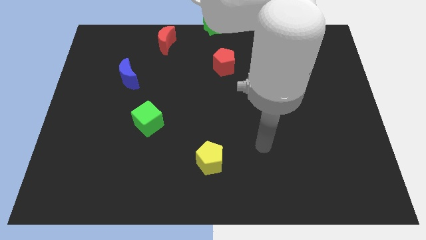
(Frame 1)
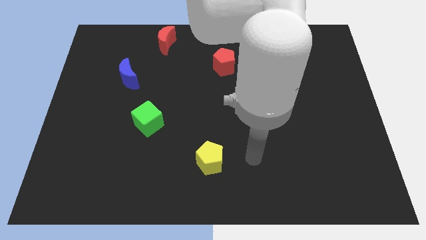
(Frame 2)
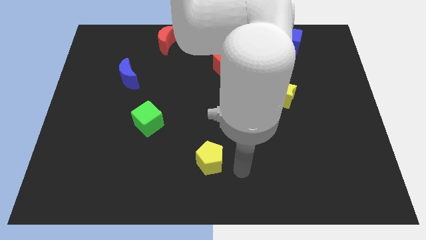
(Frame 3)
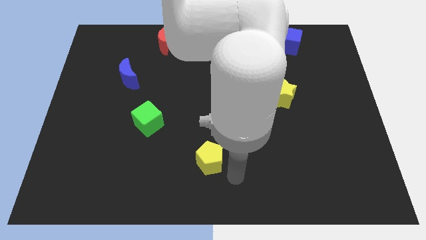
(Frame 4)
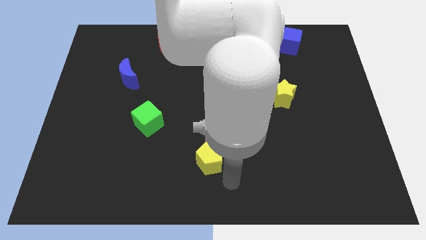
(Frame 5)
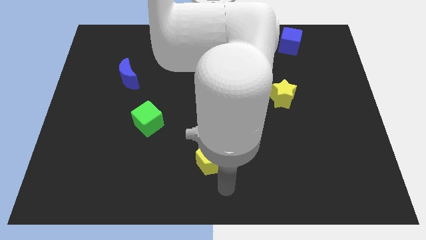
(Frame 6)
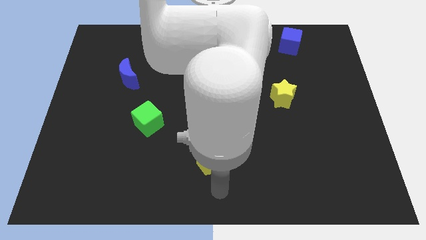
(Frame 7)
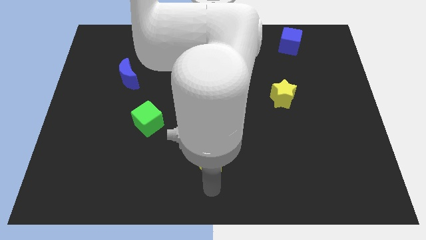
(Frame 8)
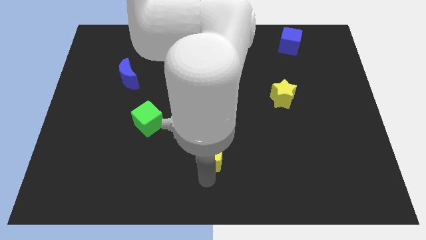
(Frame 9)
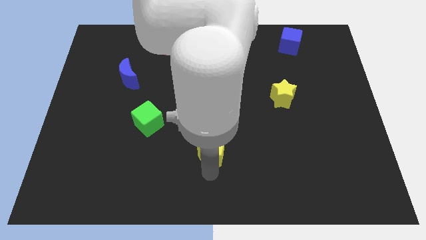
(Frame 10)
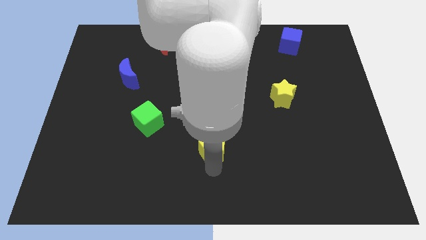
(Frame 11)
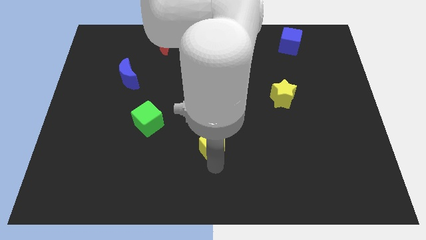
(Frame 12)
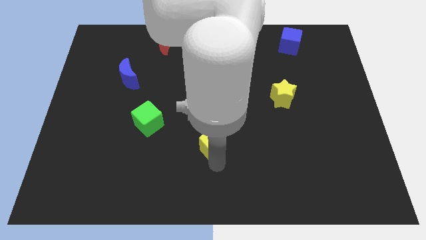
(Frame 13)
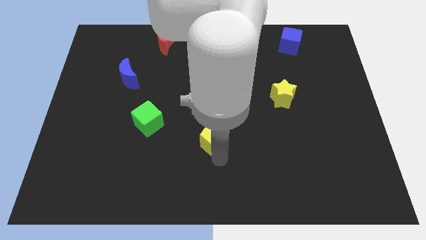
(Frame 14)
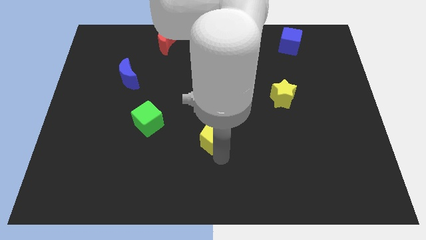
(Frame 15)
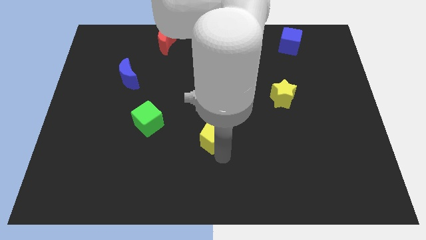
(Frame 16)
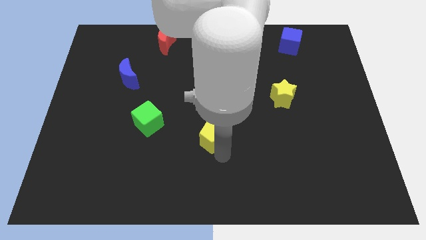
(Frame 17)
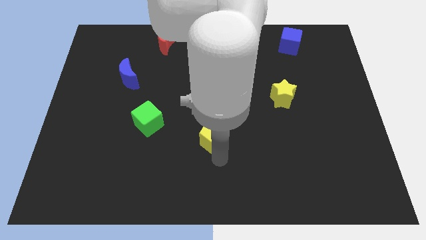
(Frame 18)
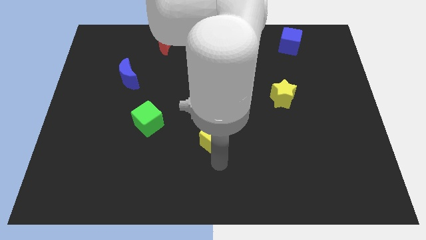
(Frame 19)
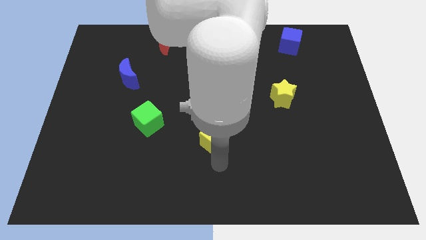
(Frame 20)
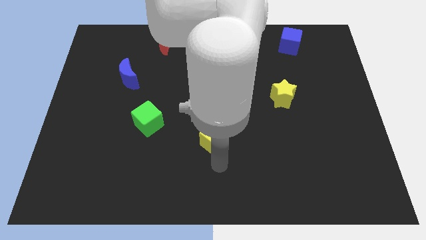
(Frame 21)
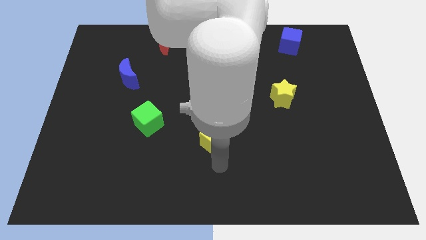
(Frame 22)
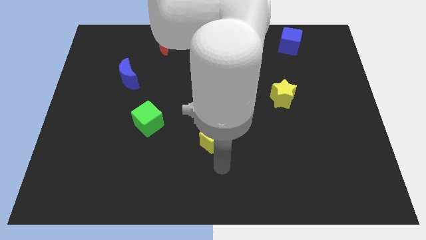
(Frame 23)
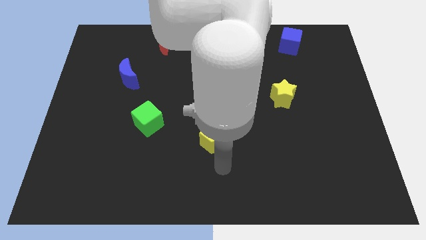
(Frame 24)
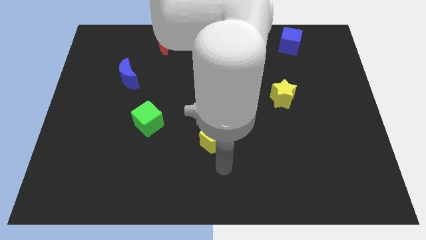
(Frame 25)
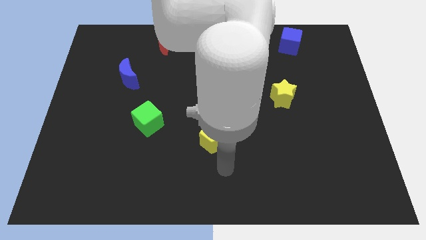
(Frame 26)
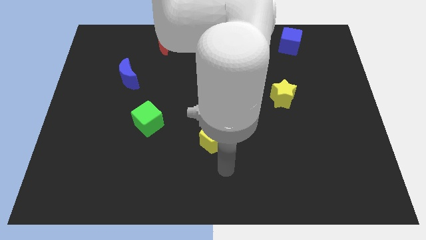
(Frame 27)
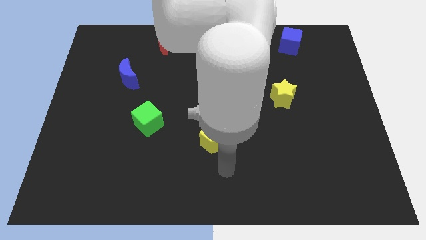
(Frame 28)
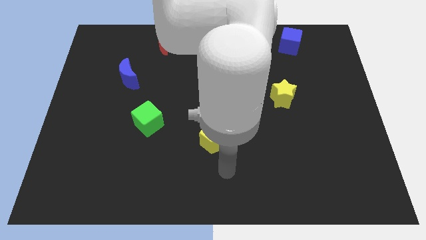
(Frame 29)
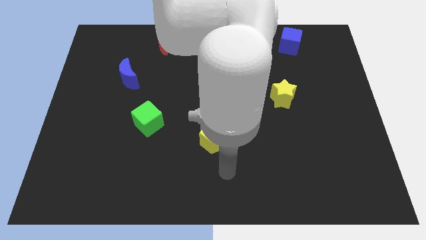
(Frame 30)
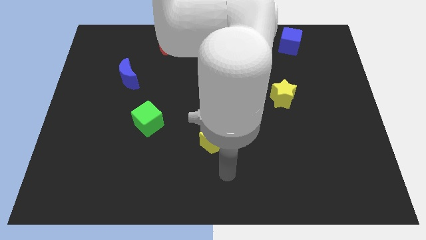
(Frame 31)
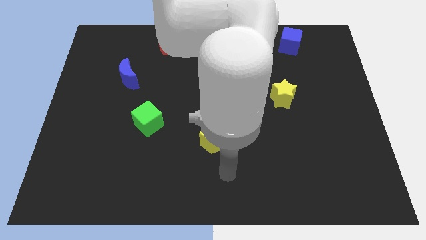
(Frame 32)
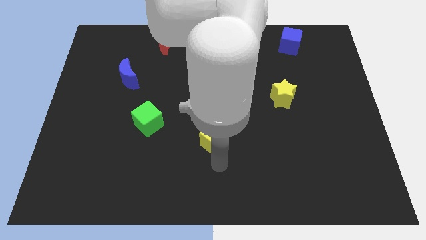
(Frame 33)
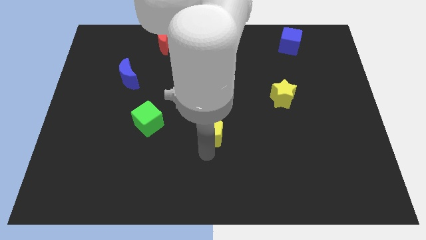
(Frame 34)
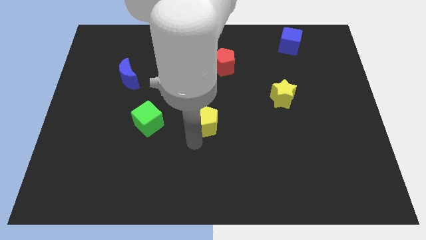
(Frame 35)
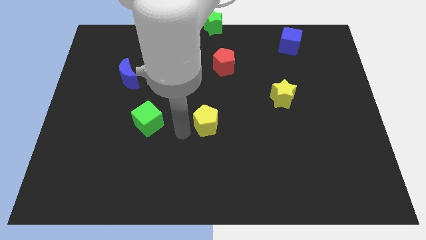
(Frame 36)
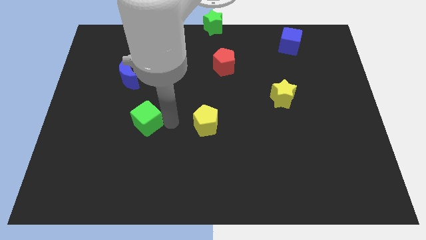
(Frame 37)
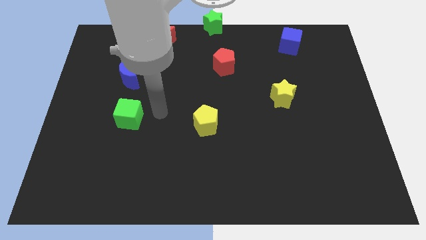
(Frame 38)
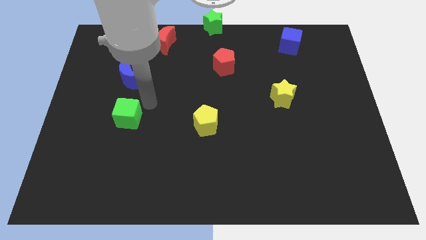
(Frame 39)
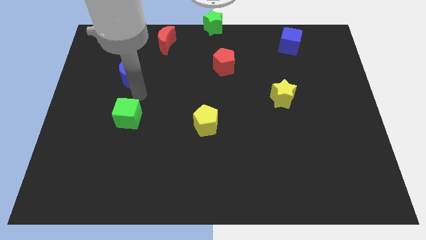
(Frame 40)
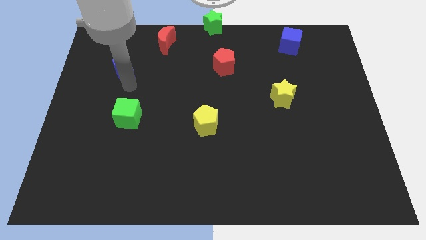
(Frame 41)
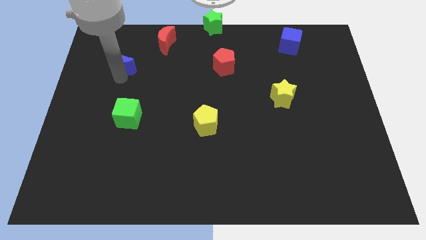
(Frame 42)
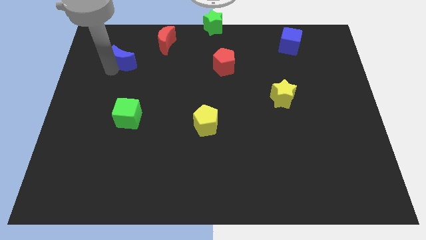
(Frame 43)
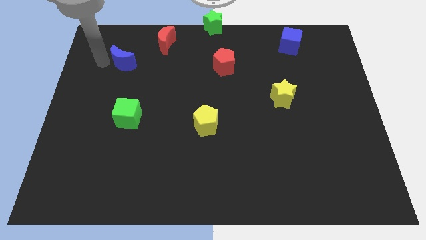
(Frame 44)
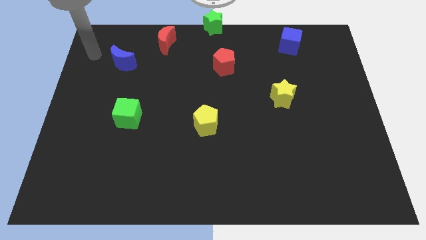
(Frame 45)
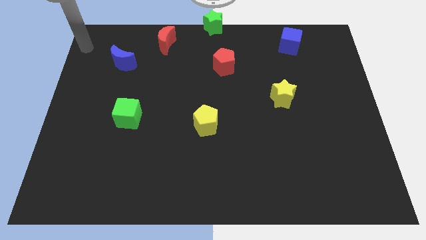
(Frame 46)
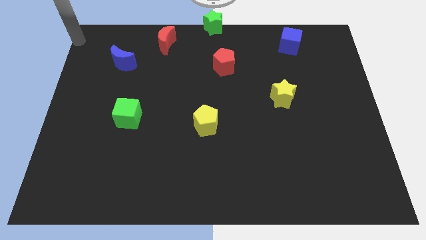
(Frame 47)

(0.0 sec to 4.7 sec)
move the yellow pentagon to the right of the green cube

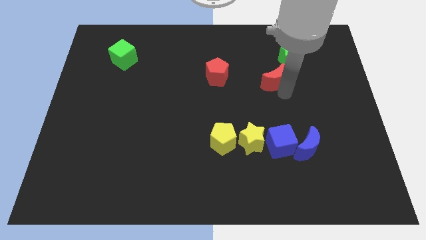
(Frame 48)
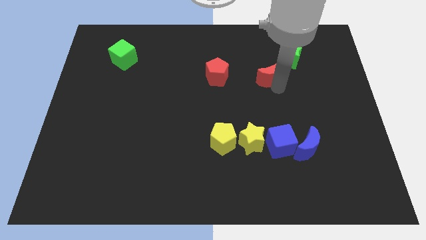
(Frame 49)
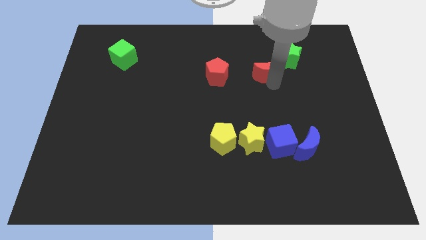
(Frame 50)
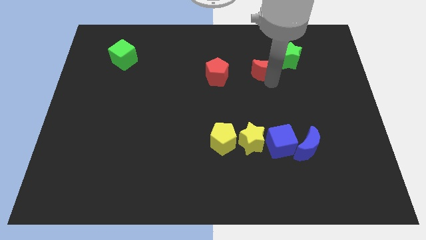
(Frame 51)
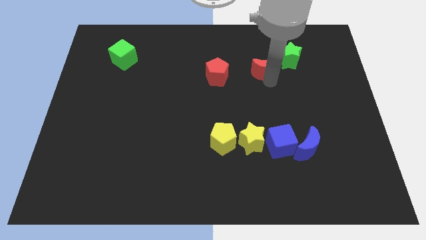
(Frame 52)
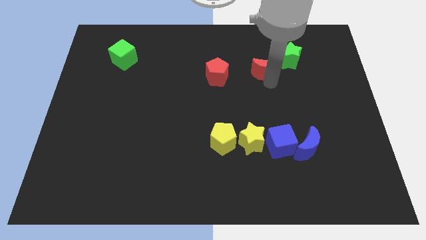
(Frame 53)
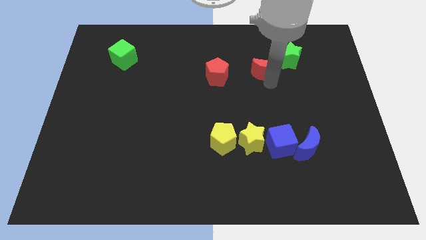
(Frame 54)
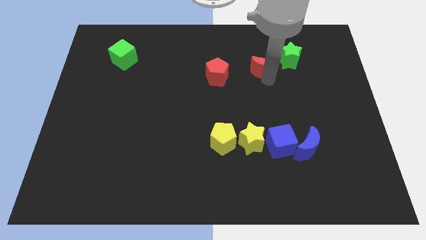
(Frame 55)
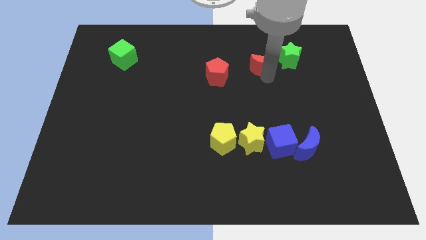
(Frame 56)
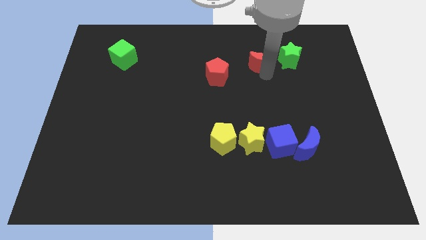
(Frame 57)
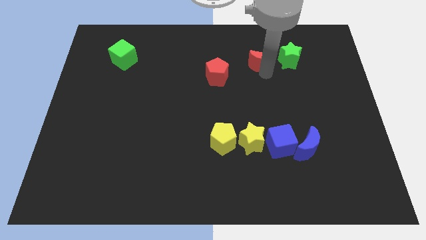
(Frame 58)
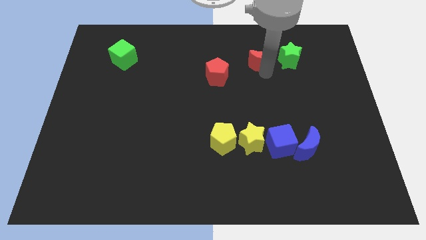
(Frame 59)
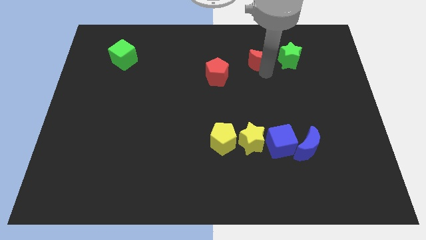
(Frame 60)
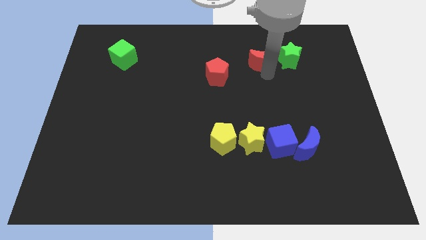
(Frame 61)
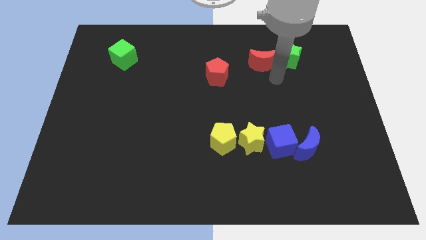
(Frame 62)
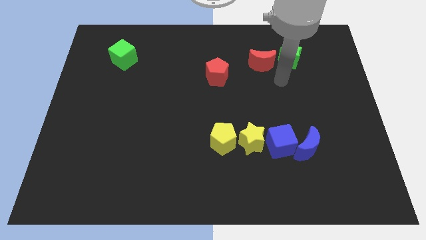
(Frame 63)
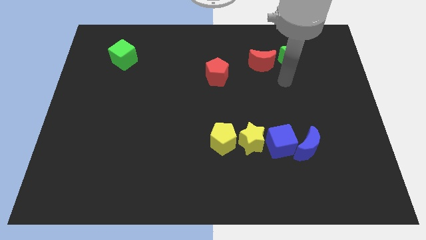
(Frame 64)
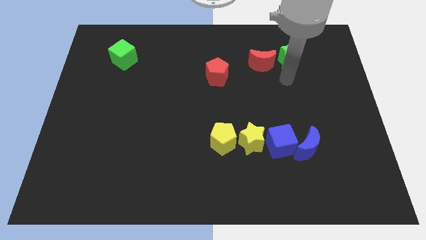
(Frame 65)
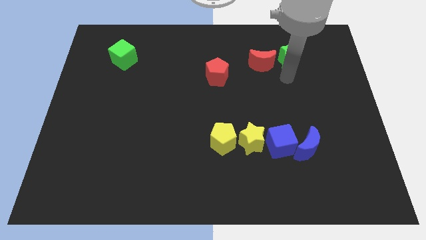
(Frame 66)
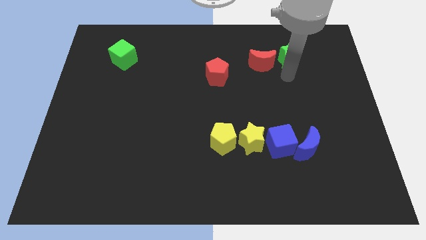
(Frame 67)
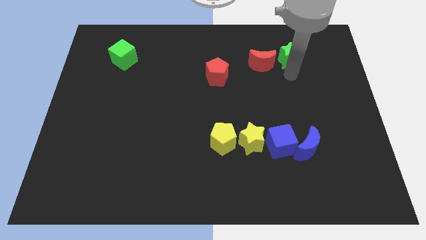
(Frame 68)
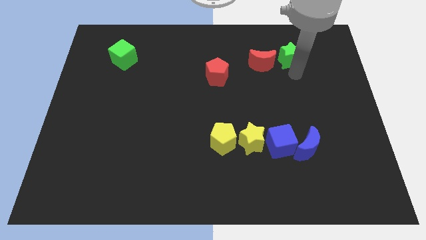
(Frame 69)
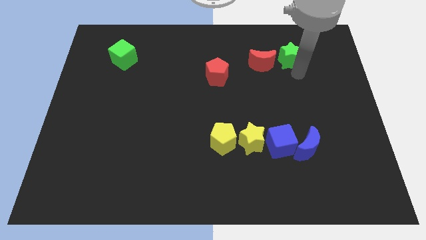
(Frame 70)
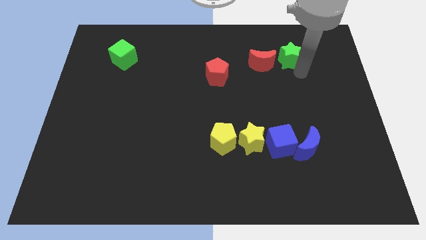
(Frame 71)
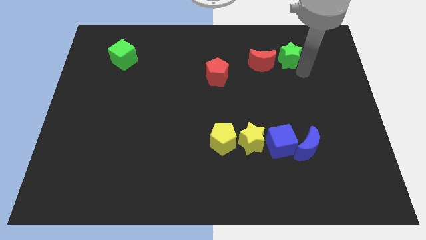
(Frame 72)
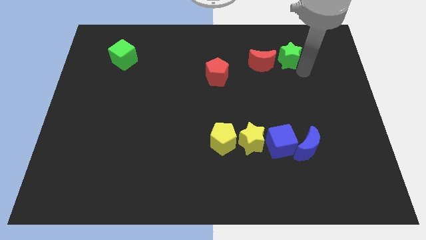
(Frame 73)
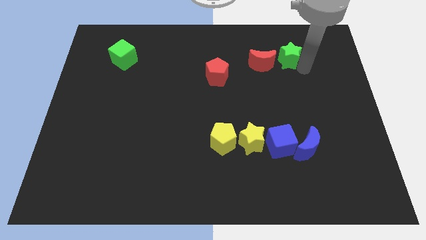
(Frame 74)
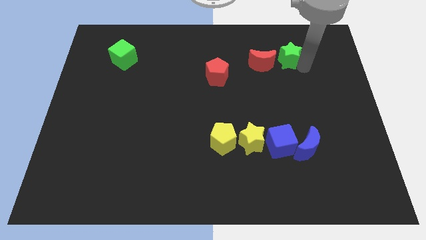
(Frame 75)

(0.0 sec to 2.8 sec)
put the red crescent at the left side of the green star

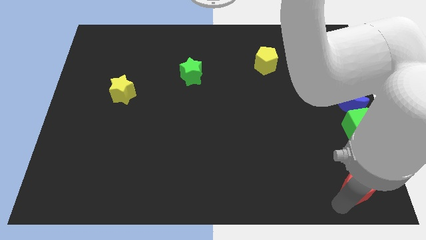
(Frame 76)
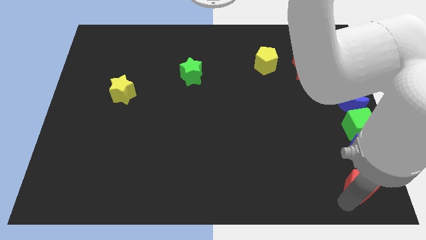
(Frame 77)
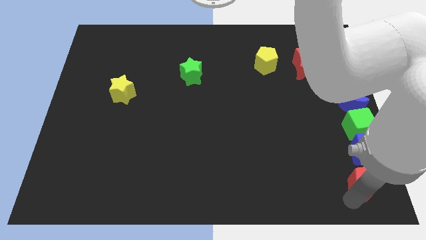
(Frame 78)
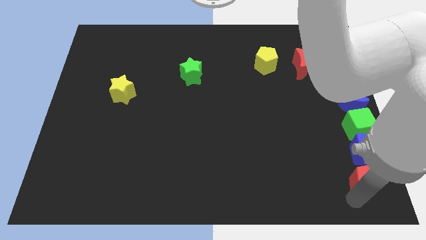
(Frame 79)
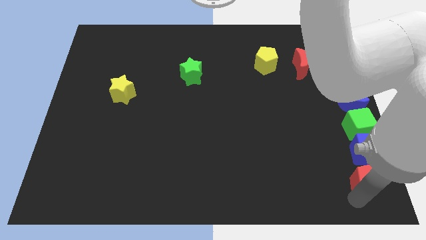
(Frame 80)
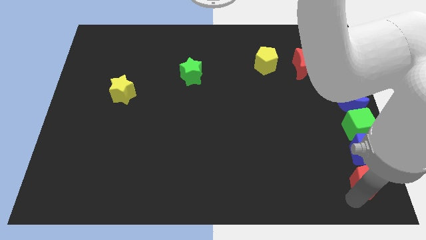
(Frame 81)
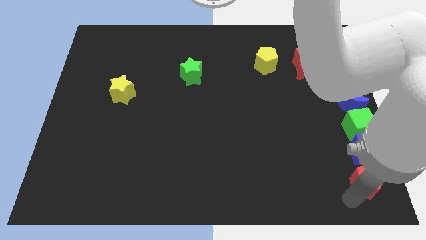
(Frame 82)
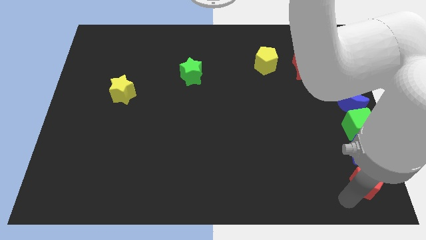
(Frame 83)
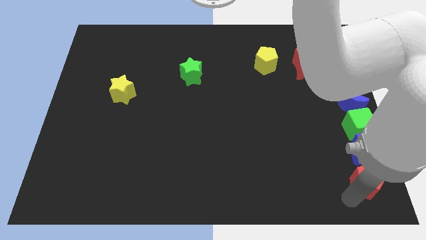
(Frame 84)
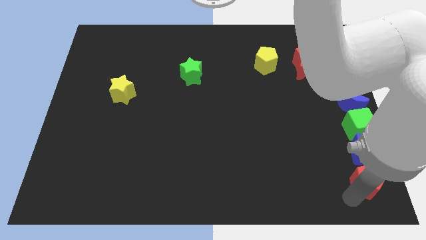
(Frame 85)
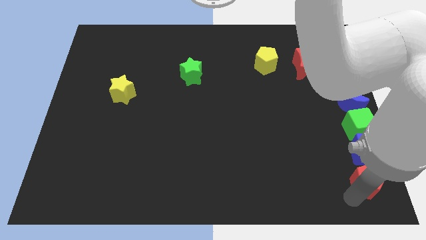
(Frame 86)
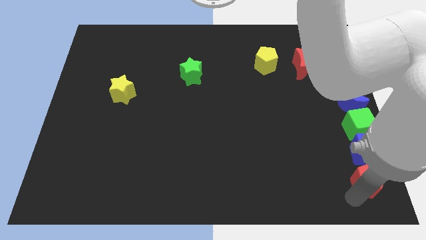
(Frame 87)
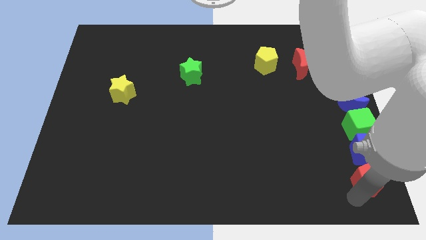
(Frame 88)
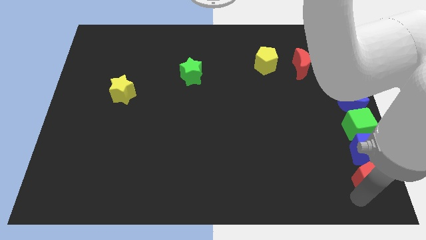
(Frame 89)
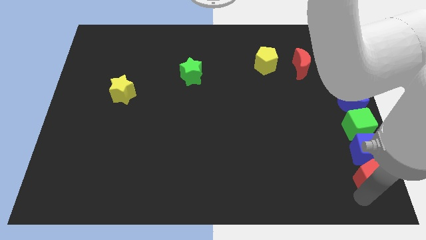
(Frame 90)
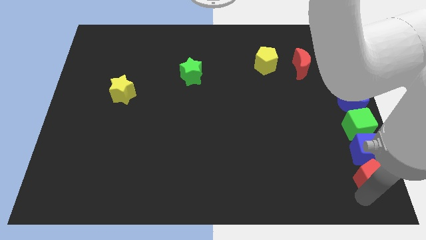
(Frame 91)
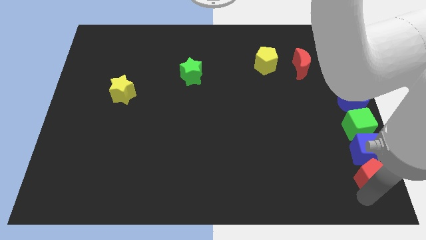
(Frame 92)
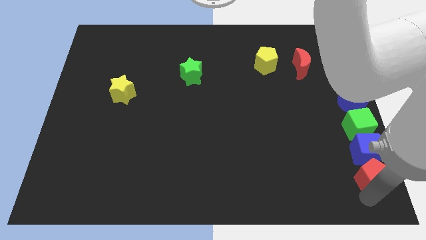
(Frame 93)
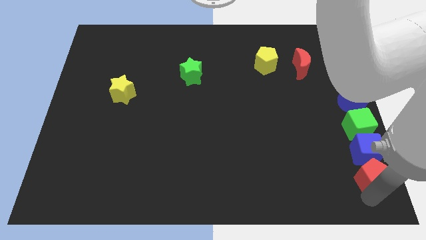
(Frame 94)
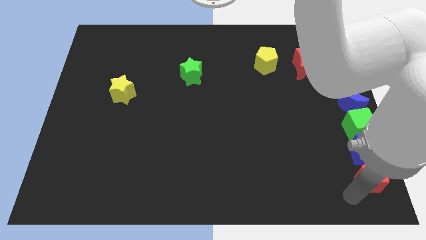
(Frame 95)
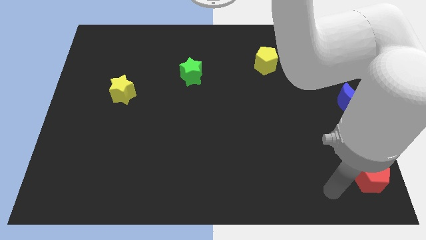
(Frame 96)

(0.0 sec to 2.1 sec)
move red pentagon into blue cube
